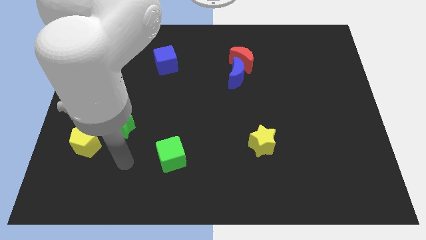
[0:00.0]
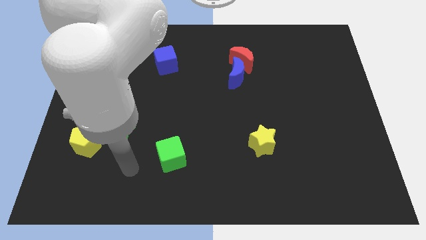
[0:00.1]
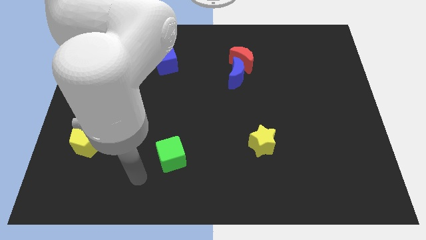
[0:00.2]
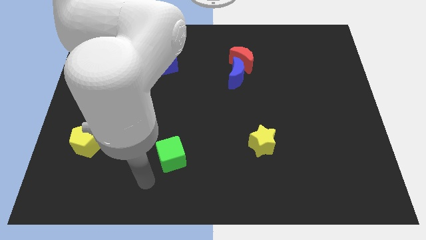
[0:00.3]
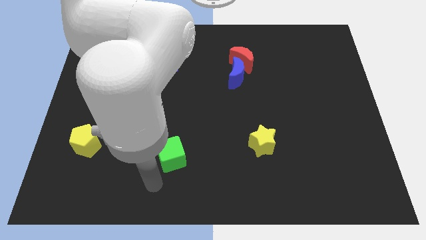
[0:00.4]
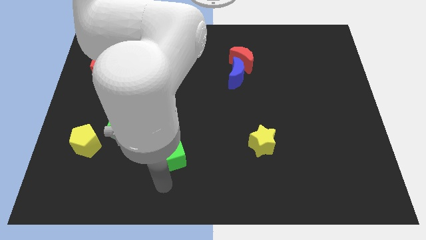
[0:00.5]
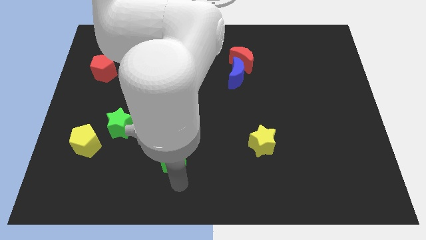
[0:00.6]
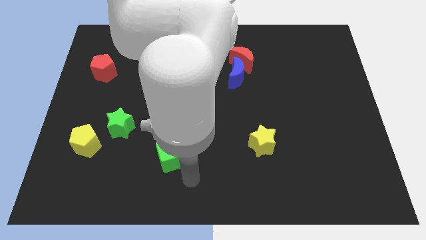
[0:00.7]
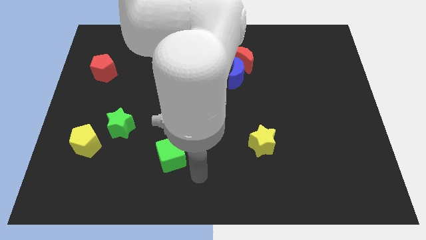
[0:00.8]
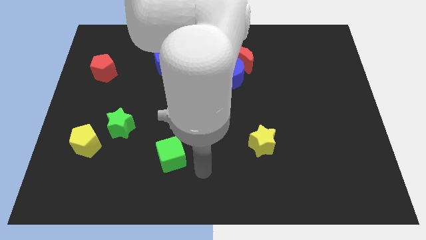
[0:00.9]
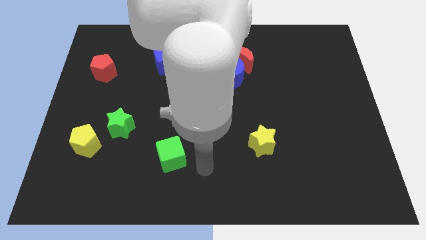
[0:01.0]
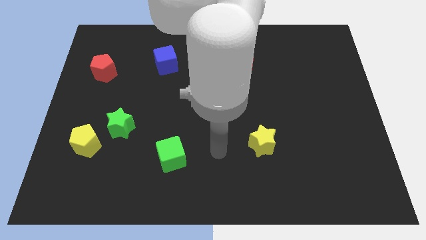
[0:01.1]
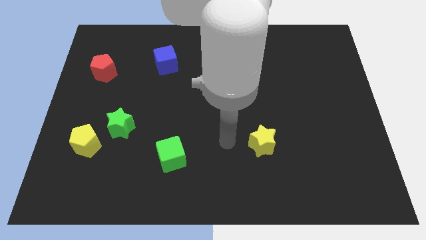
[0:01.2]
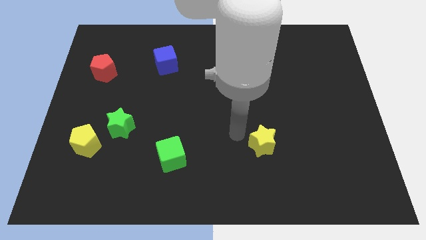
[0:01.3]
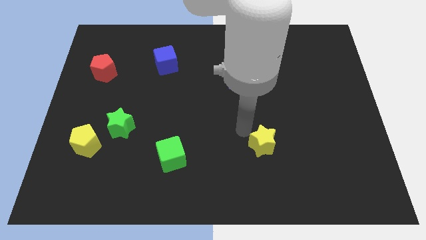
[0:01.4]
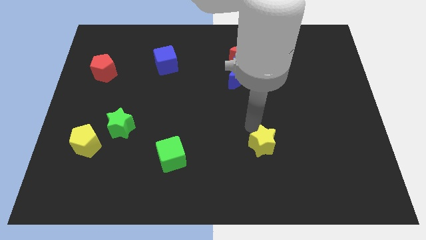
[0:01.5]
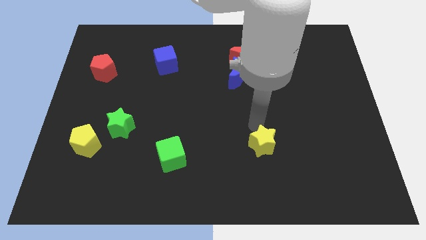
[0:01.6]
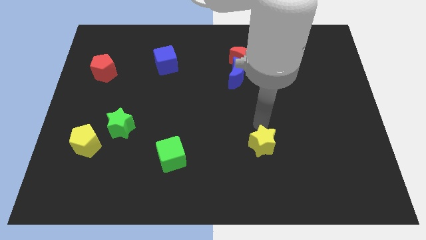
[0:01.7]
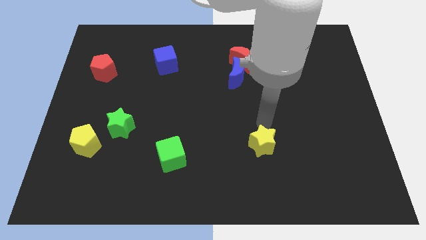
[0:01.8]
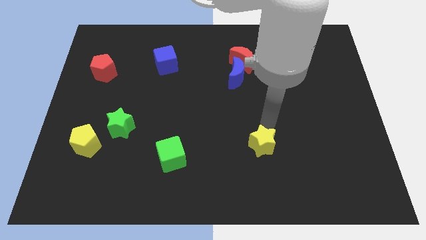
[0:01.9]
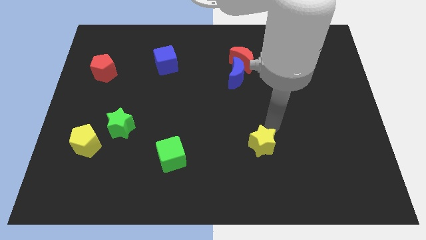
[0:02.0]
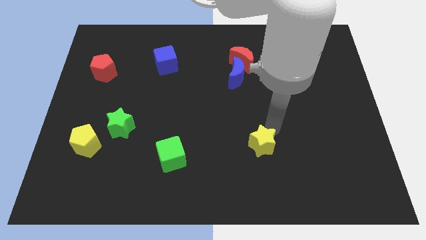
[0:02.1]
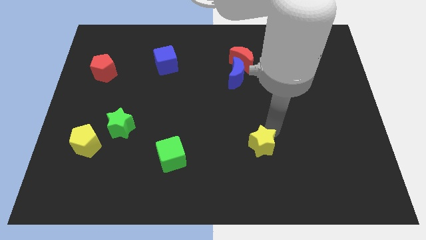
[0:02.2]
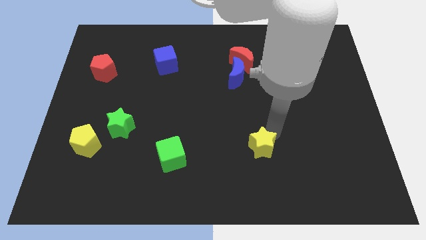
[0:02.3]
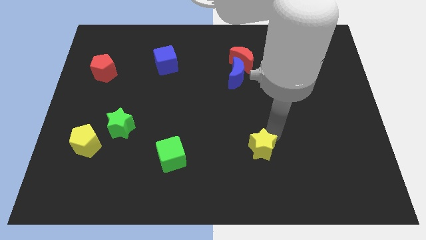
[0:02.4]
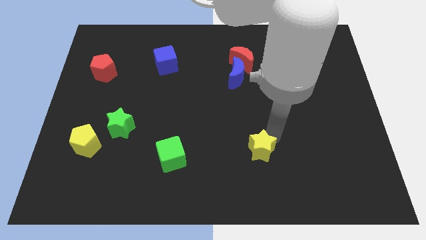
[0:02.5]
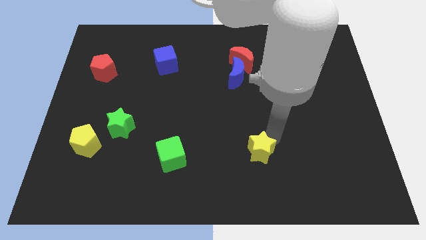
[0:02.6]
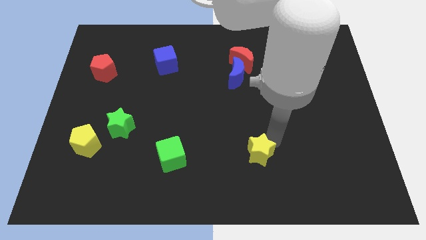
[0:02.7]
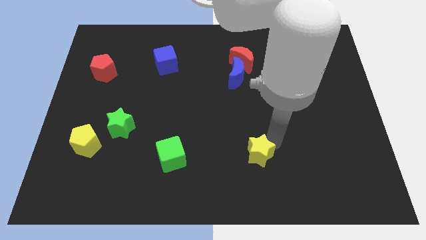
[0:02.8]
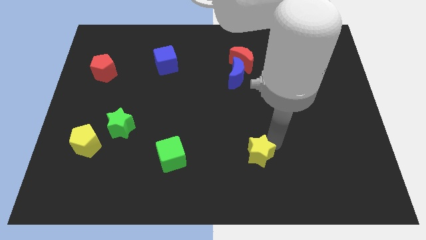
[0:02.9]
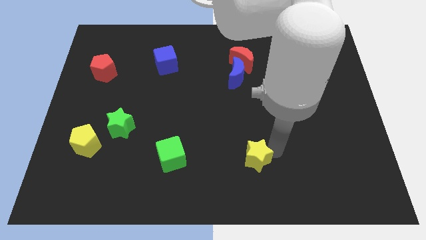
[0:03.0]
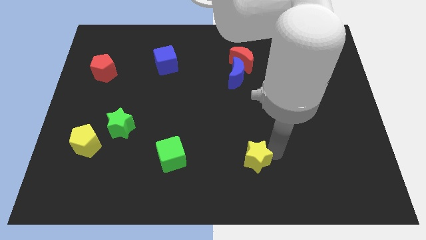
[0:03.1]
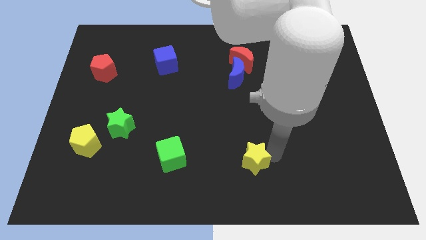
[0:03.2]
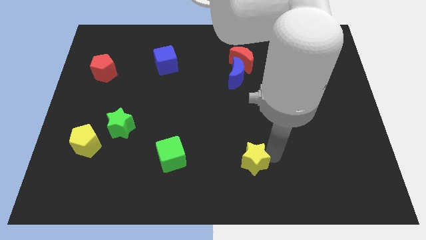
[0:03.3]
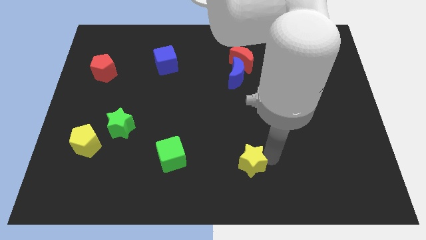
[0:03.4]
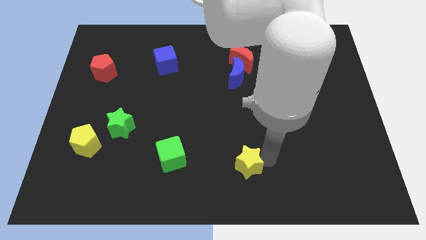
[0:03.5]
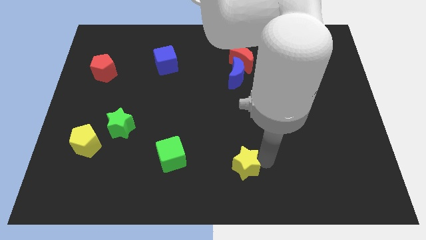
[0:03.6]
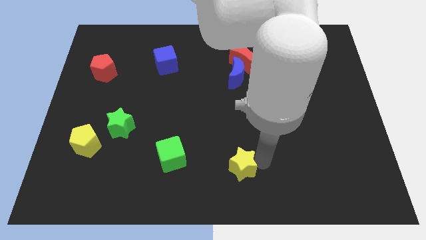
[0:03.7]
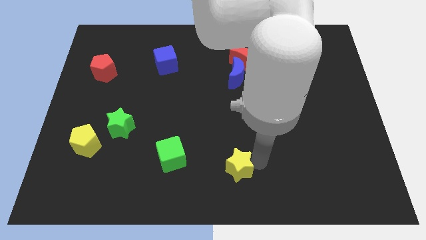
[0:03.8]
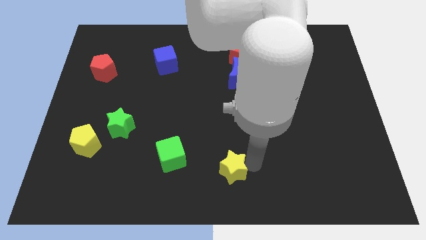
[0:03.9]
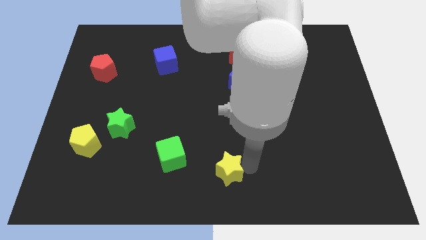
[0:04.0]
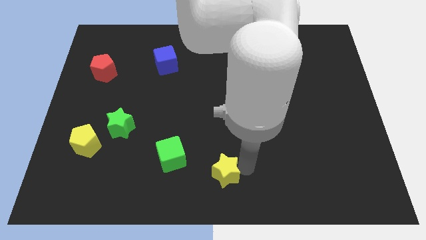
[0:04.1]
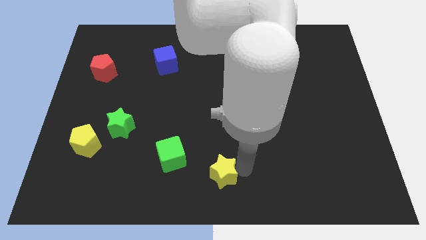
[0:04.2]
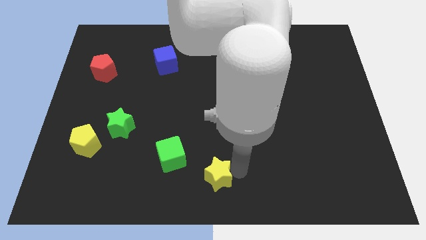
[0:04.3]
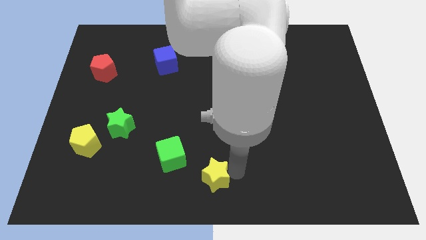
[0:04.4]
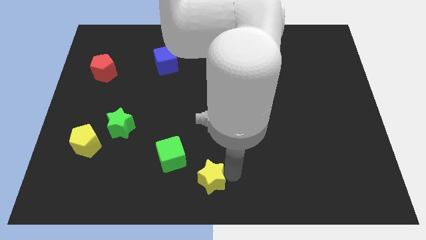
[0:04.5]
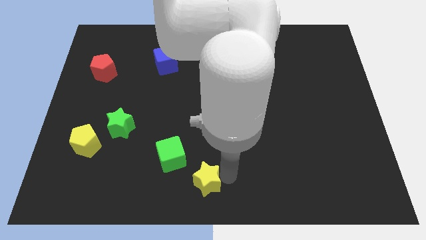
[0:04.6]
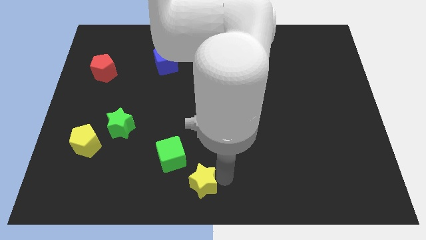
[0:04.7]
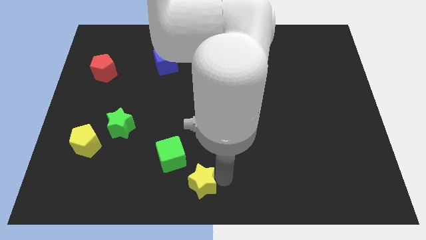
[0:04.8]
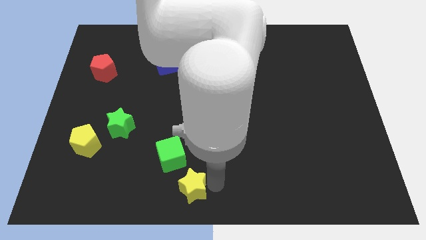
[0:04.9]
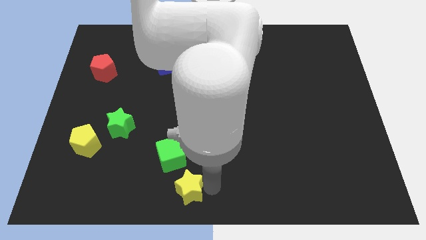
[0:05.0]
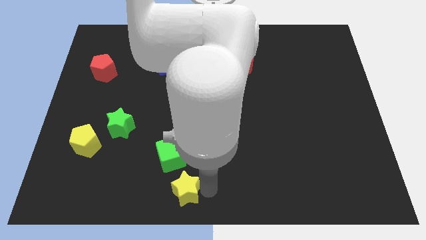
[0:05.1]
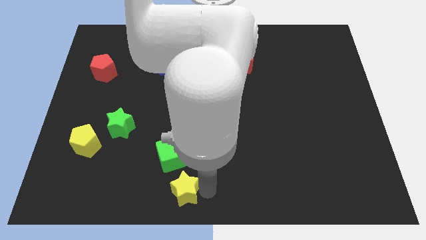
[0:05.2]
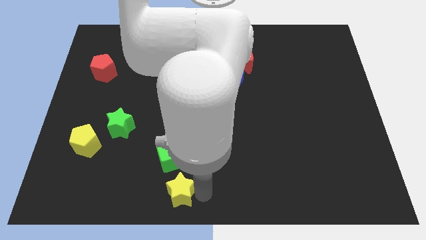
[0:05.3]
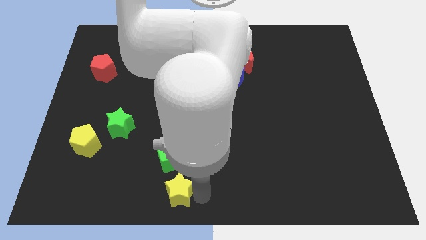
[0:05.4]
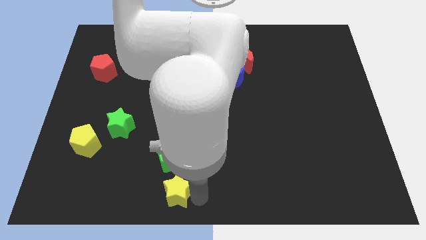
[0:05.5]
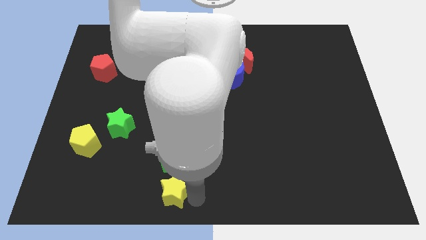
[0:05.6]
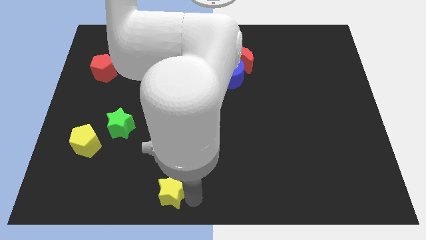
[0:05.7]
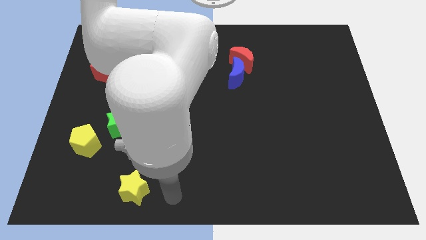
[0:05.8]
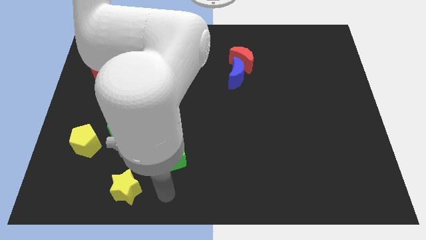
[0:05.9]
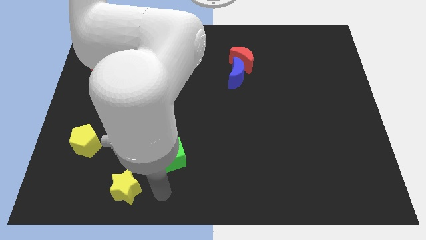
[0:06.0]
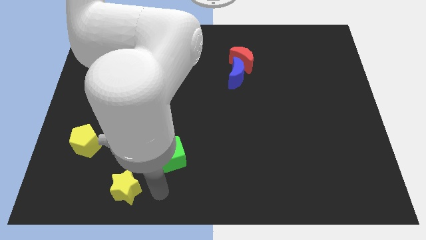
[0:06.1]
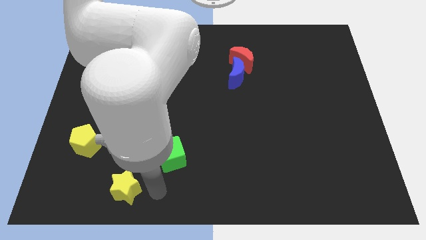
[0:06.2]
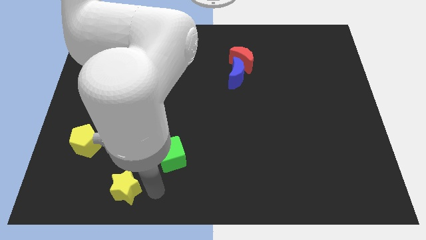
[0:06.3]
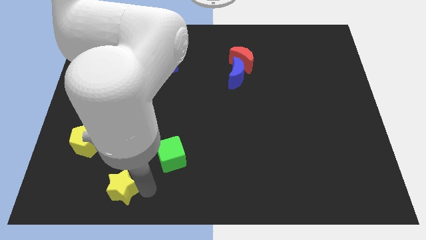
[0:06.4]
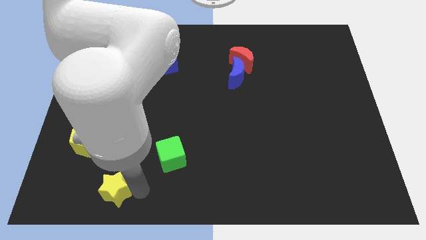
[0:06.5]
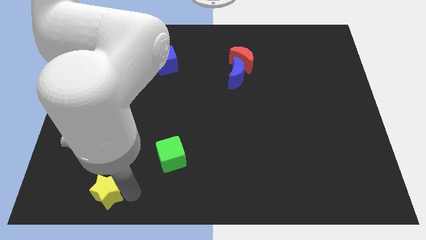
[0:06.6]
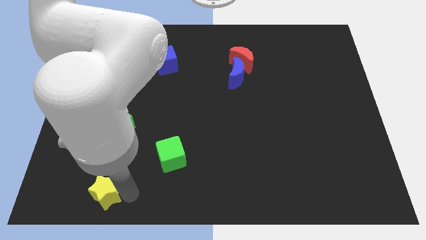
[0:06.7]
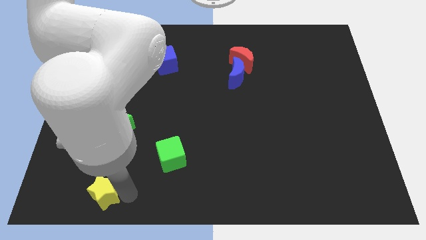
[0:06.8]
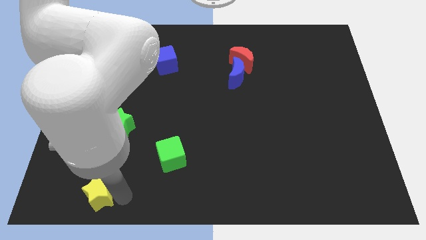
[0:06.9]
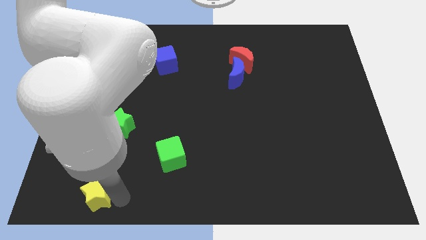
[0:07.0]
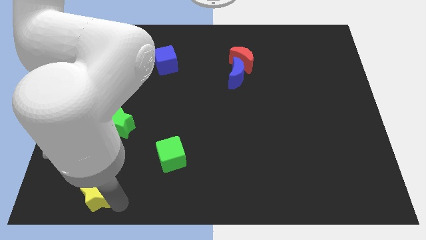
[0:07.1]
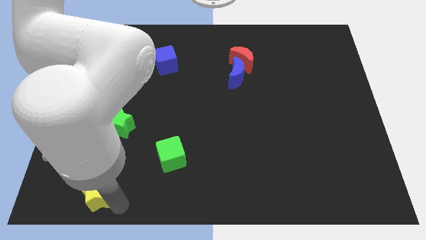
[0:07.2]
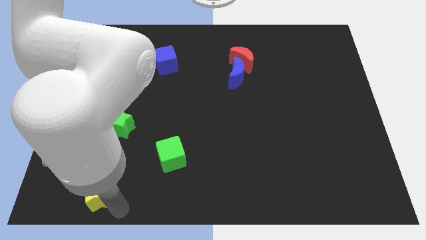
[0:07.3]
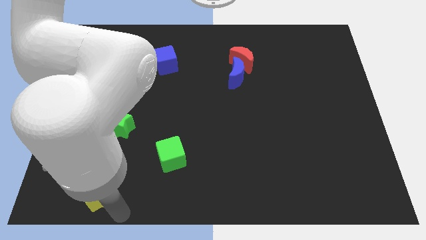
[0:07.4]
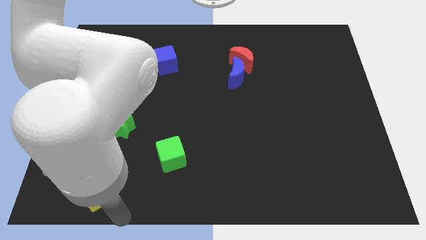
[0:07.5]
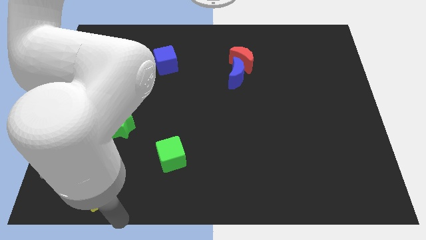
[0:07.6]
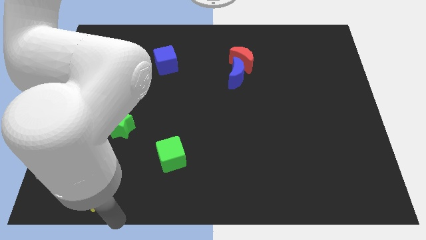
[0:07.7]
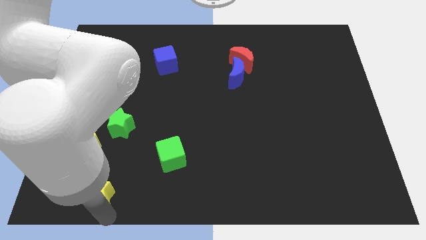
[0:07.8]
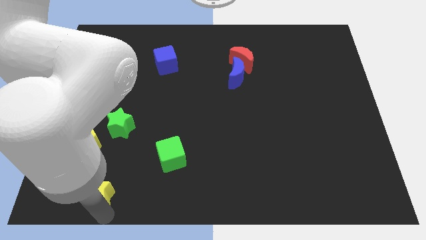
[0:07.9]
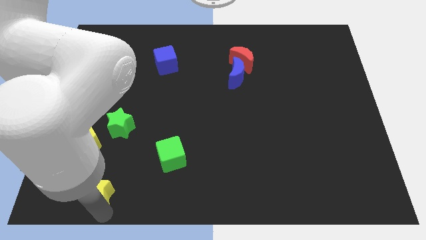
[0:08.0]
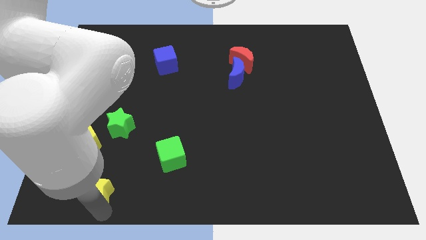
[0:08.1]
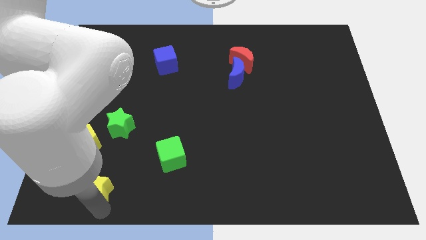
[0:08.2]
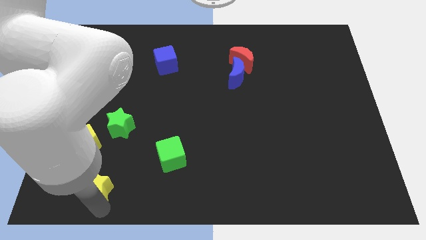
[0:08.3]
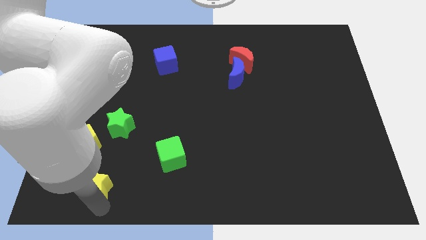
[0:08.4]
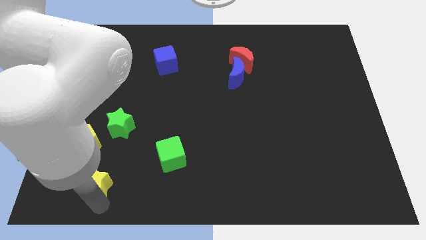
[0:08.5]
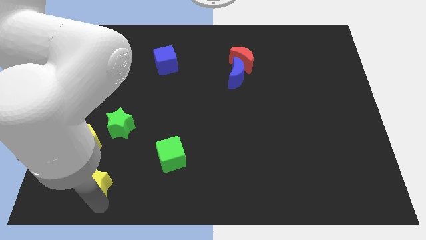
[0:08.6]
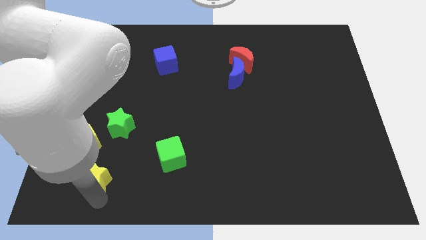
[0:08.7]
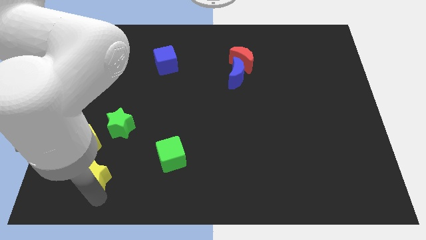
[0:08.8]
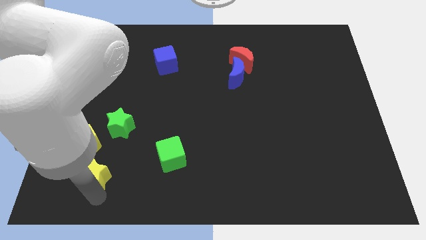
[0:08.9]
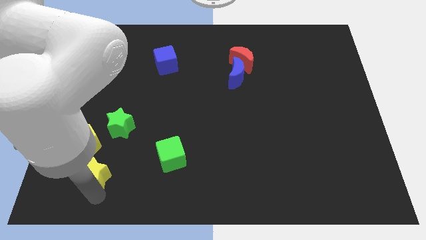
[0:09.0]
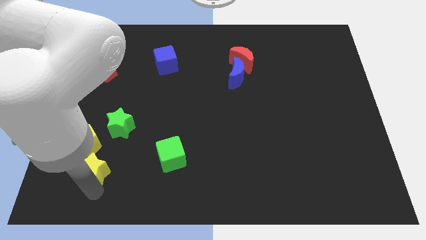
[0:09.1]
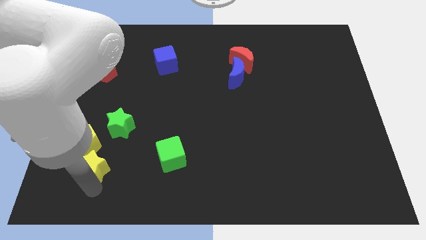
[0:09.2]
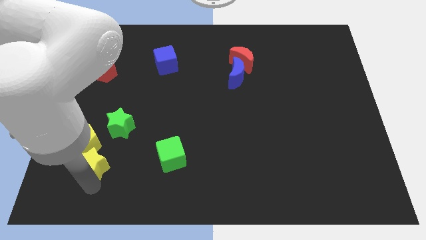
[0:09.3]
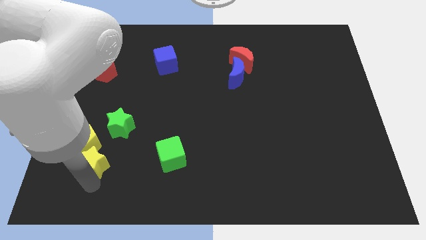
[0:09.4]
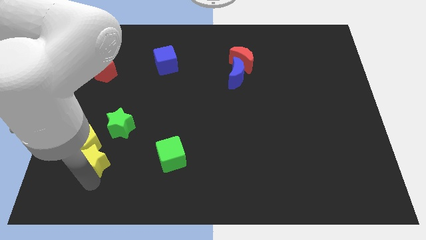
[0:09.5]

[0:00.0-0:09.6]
push the yellow star next to the yellow pentagon
